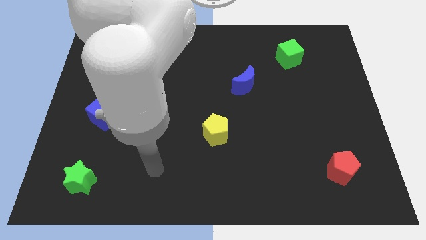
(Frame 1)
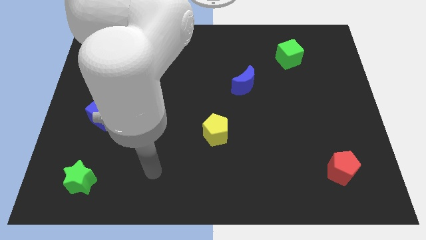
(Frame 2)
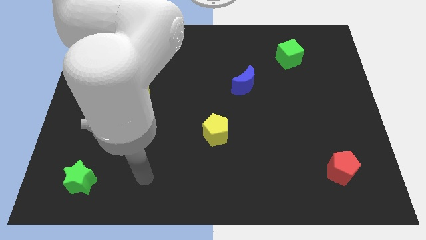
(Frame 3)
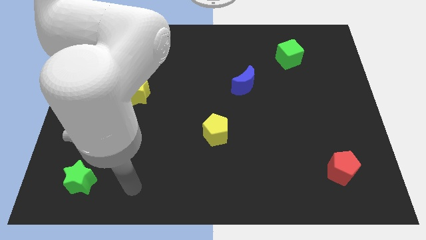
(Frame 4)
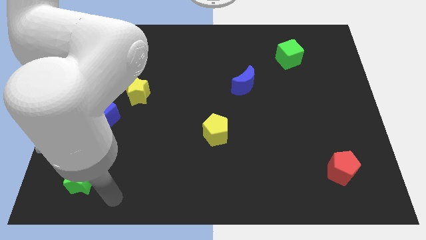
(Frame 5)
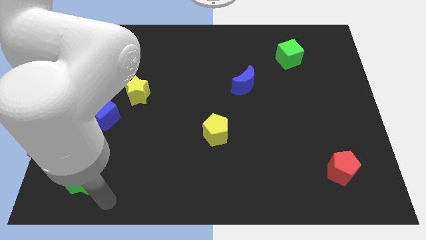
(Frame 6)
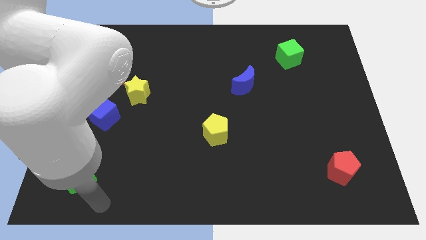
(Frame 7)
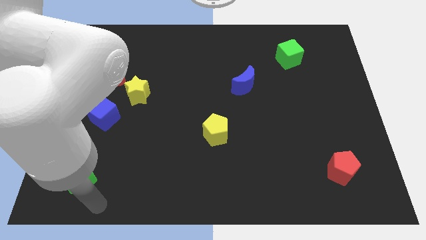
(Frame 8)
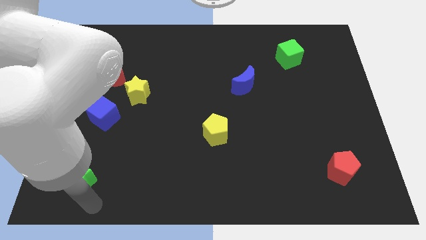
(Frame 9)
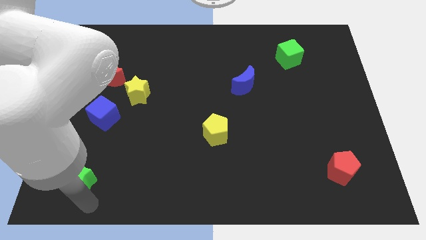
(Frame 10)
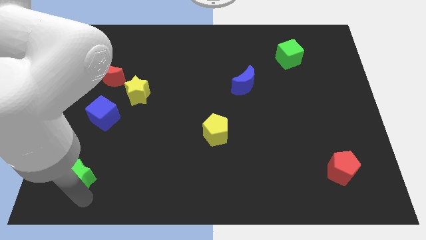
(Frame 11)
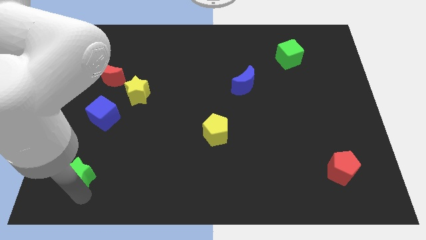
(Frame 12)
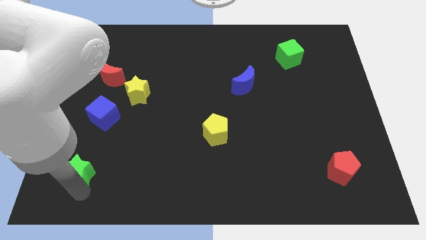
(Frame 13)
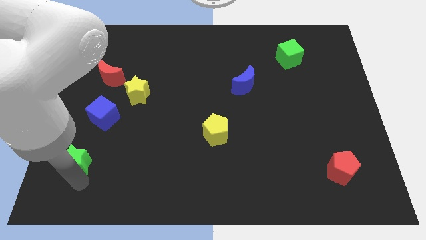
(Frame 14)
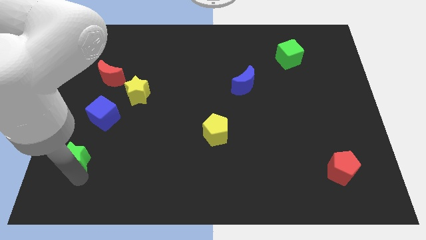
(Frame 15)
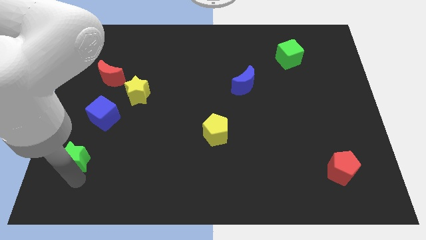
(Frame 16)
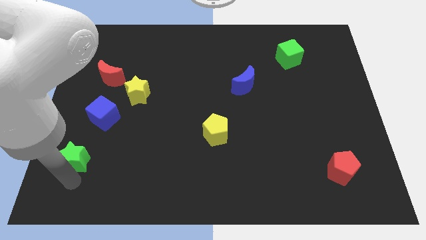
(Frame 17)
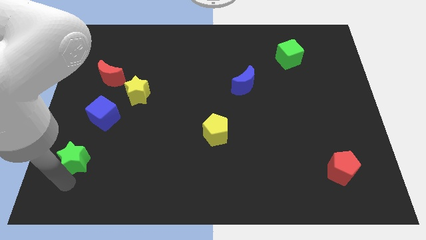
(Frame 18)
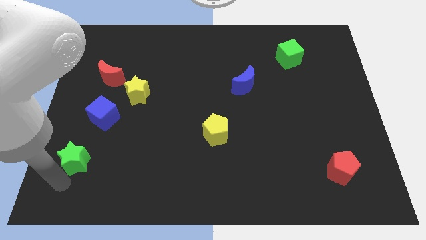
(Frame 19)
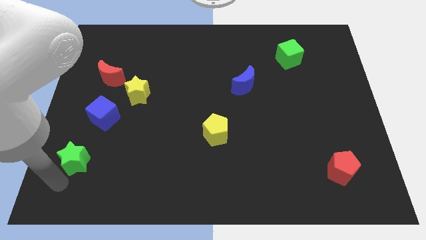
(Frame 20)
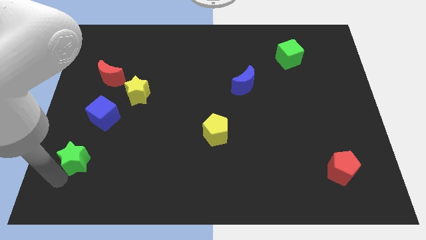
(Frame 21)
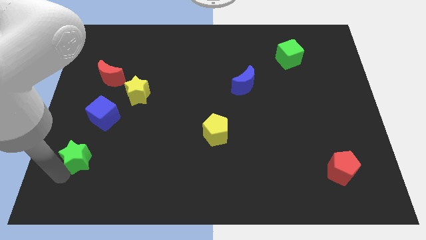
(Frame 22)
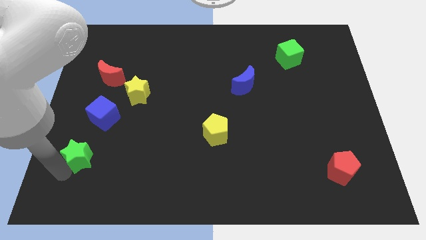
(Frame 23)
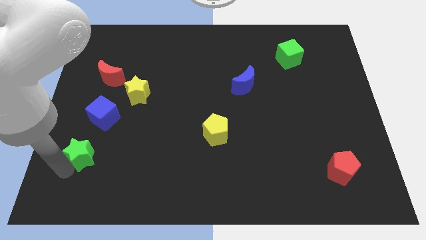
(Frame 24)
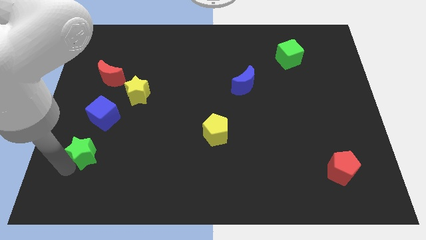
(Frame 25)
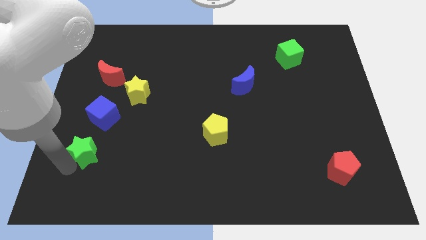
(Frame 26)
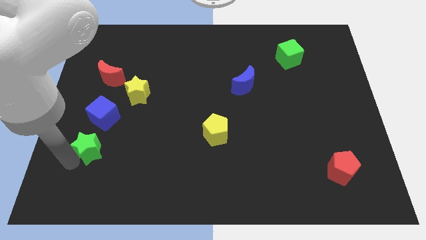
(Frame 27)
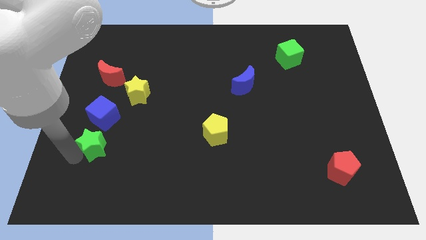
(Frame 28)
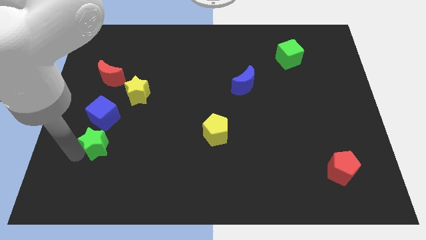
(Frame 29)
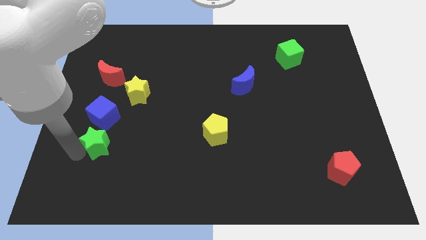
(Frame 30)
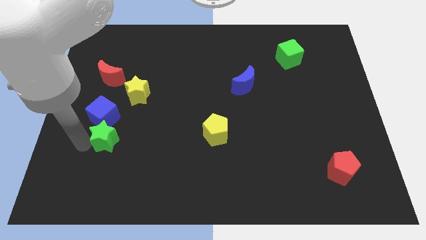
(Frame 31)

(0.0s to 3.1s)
move the green star to the blue cube

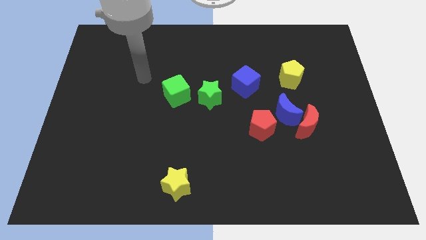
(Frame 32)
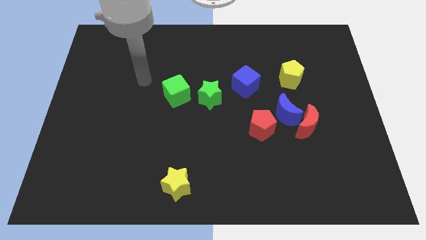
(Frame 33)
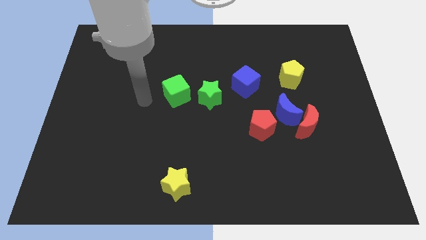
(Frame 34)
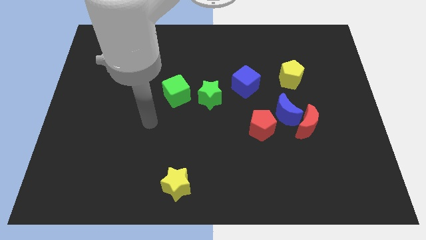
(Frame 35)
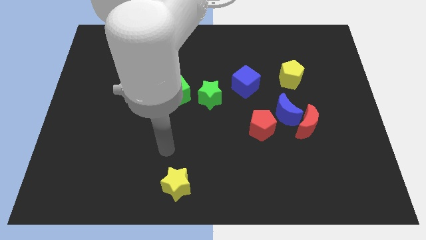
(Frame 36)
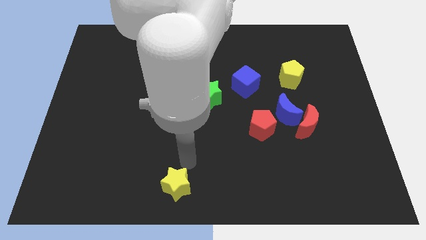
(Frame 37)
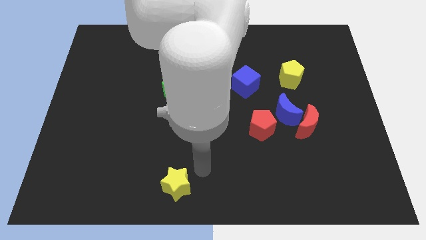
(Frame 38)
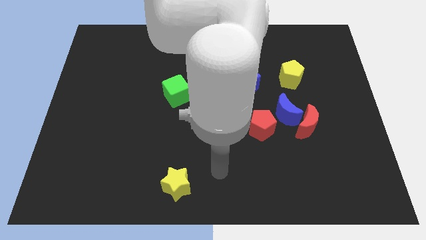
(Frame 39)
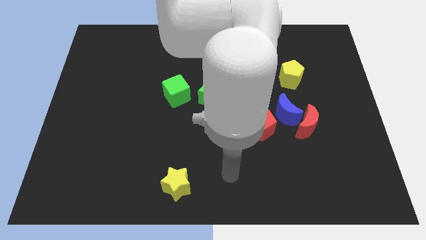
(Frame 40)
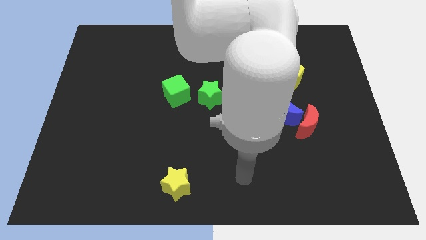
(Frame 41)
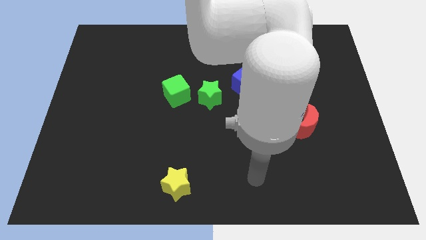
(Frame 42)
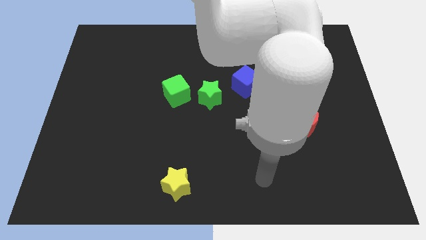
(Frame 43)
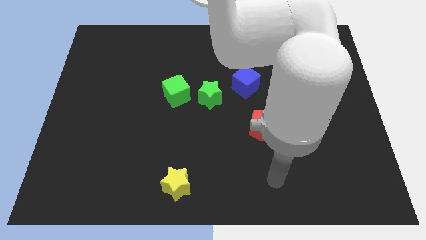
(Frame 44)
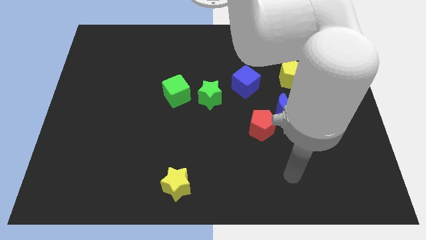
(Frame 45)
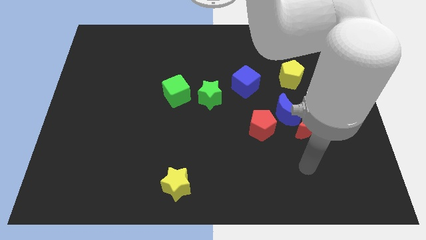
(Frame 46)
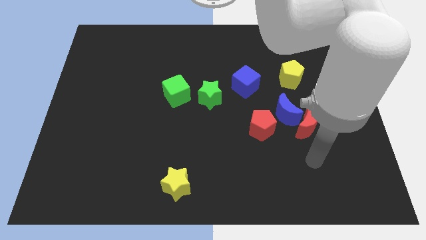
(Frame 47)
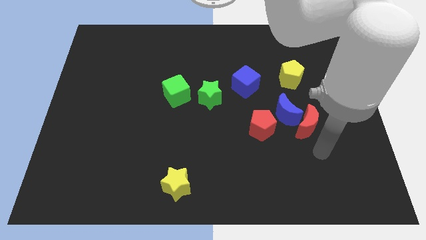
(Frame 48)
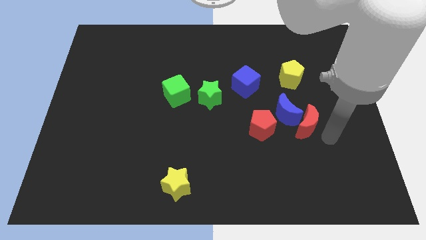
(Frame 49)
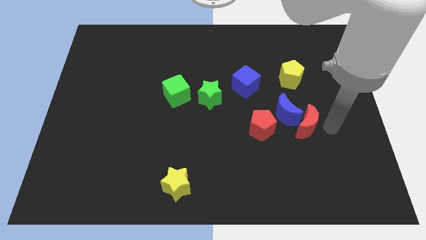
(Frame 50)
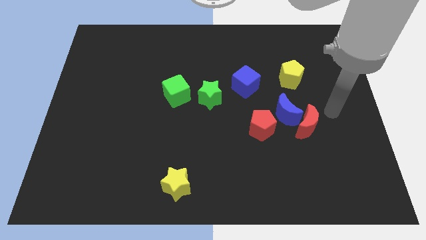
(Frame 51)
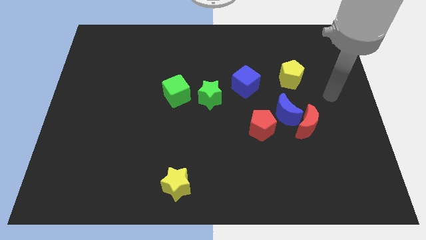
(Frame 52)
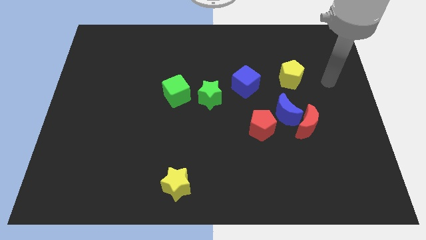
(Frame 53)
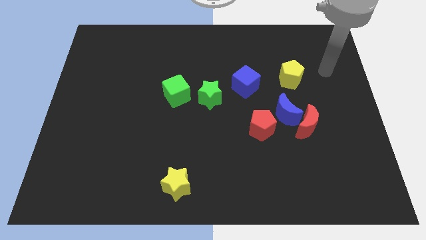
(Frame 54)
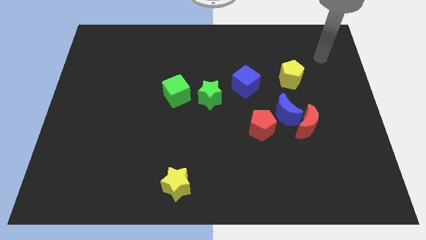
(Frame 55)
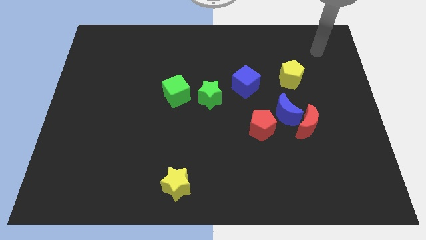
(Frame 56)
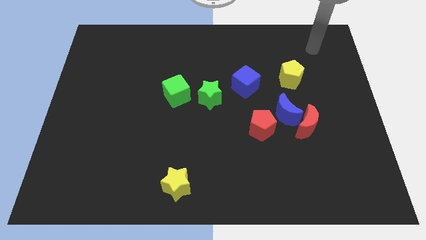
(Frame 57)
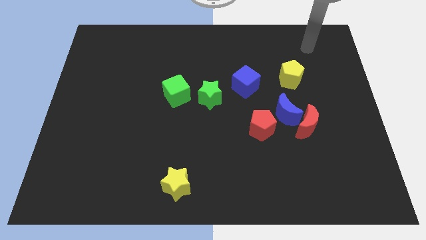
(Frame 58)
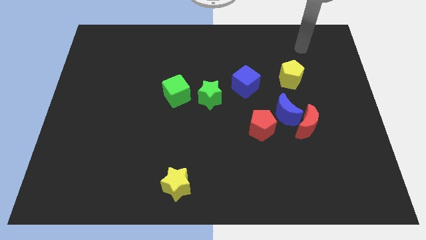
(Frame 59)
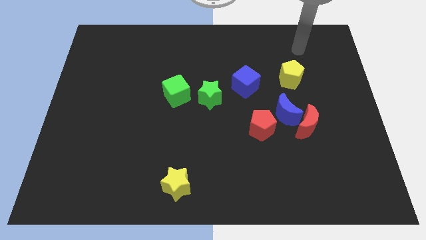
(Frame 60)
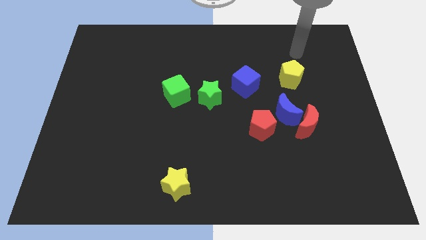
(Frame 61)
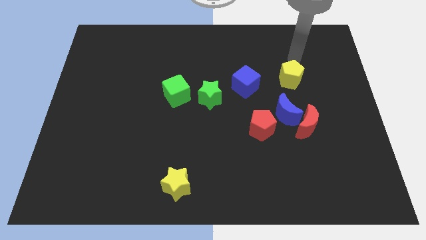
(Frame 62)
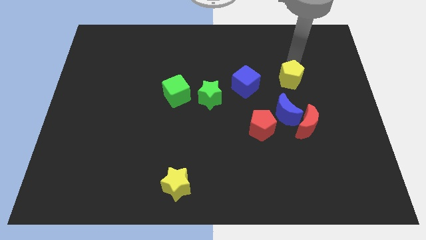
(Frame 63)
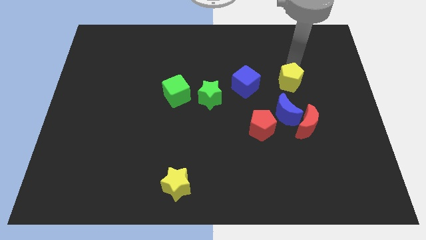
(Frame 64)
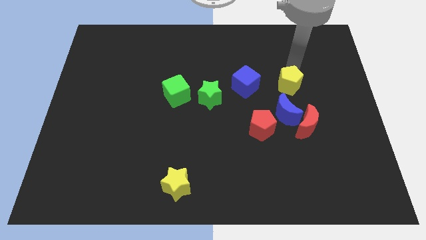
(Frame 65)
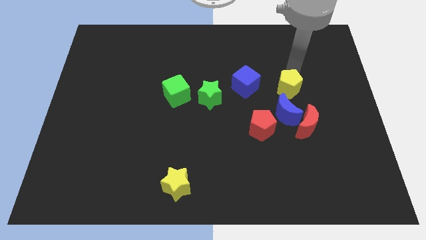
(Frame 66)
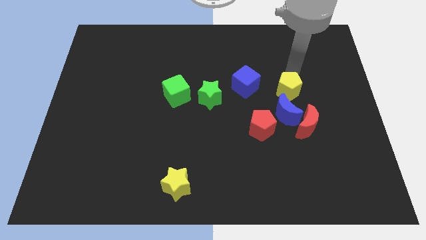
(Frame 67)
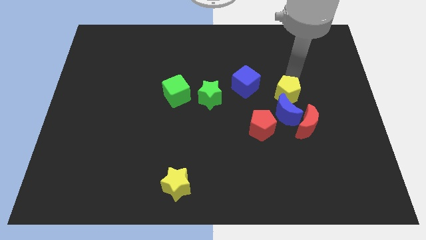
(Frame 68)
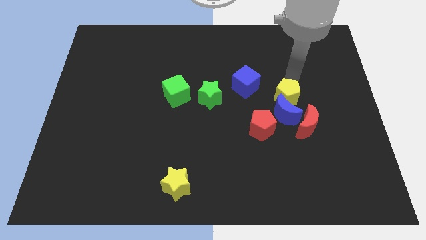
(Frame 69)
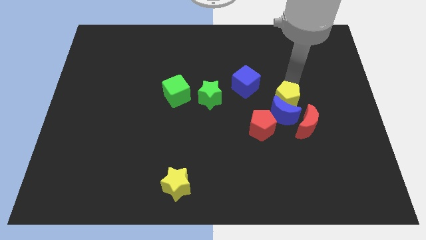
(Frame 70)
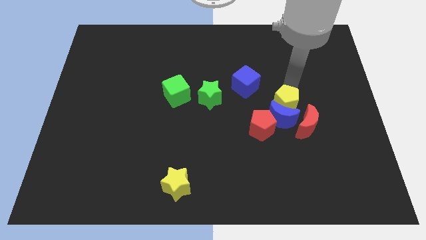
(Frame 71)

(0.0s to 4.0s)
push the yellow pentagon to the blue moon

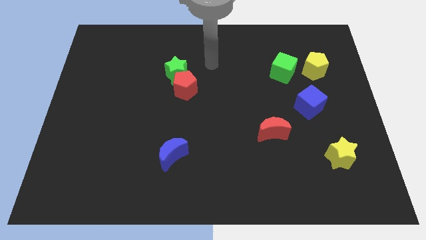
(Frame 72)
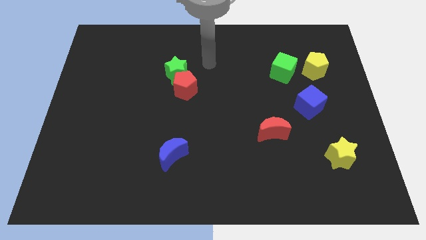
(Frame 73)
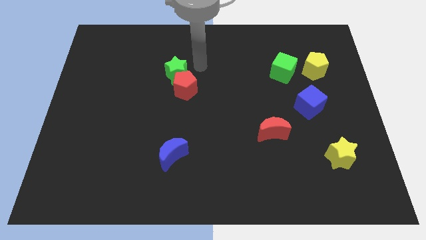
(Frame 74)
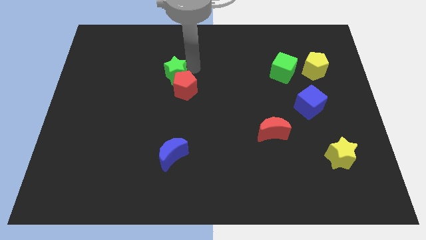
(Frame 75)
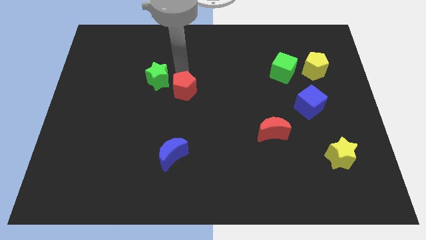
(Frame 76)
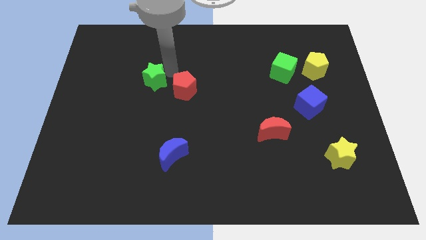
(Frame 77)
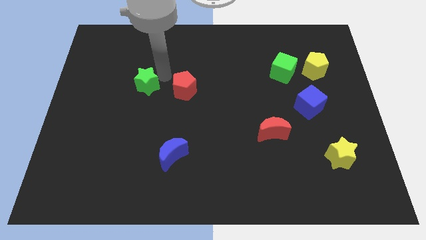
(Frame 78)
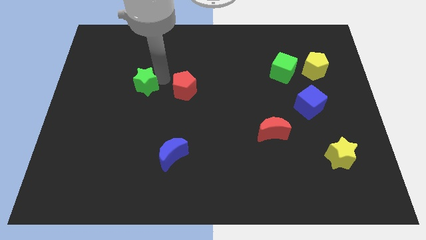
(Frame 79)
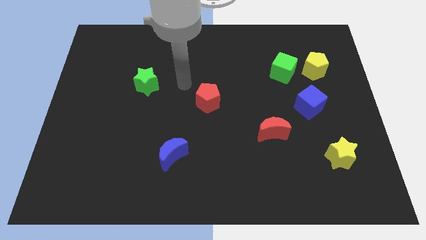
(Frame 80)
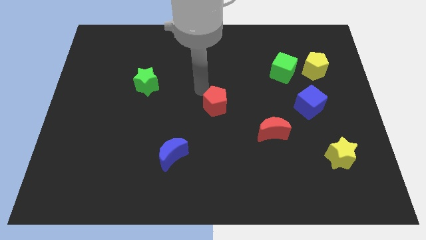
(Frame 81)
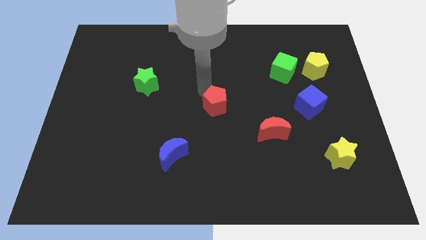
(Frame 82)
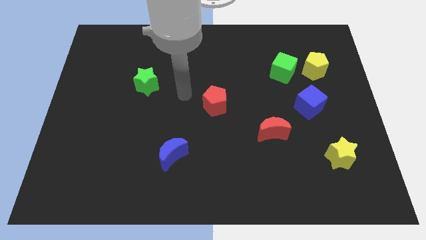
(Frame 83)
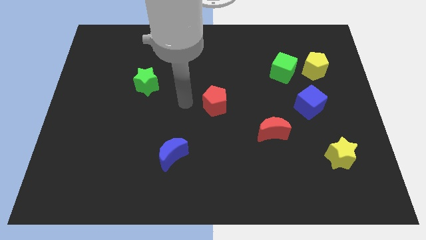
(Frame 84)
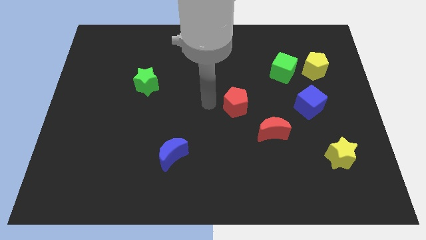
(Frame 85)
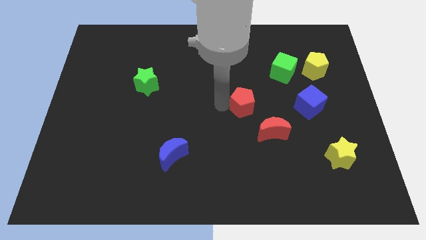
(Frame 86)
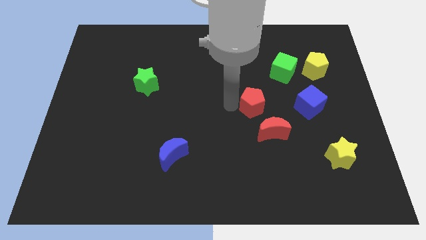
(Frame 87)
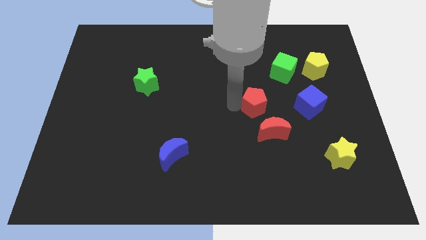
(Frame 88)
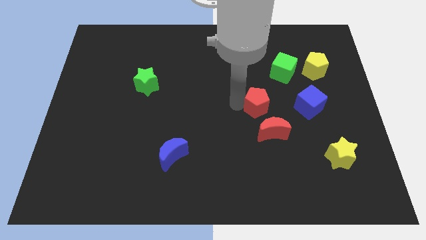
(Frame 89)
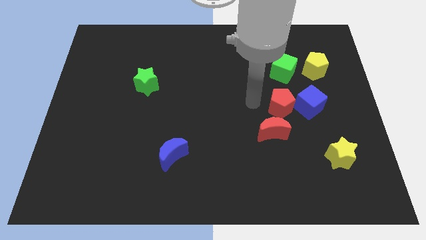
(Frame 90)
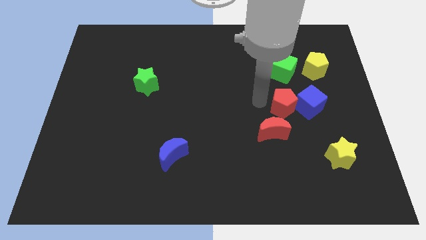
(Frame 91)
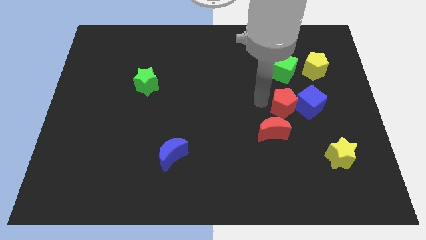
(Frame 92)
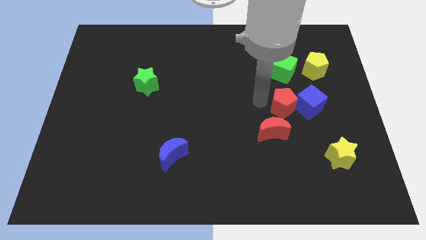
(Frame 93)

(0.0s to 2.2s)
slide the red pentagon next to the blue cube
